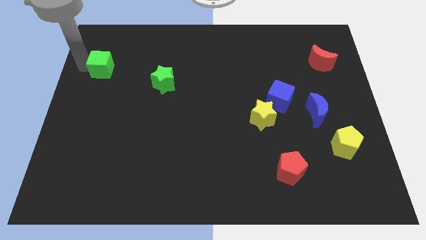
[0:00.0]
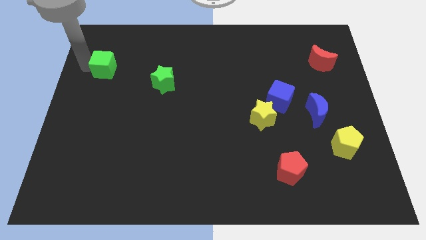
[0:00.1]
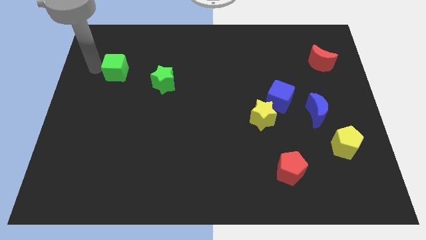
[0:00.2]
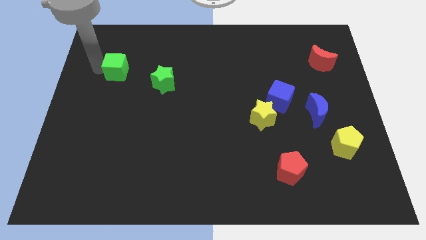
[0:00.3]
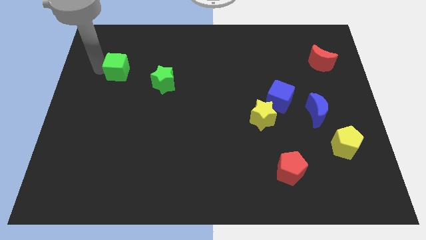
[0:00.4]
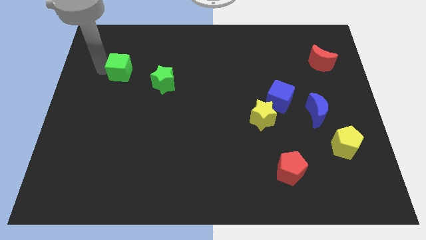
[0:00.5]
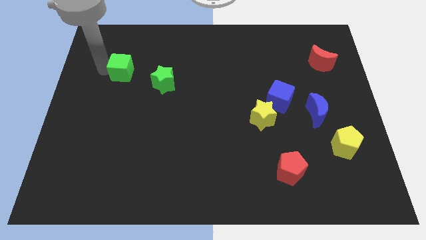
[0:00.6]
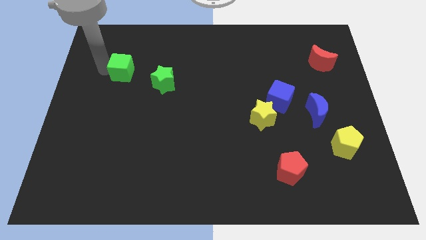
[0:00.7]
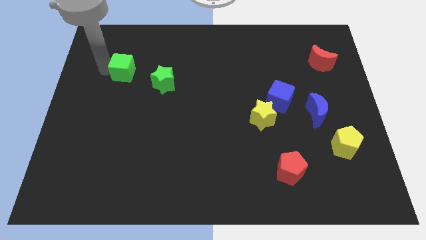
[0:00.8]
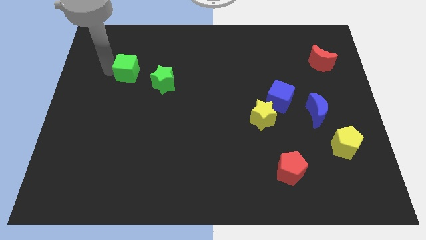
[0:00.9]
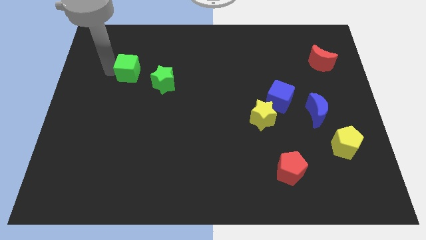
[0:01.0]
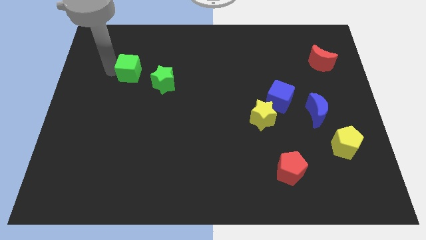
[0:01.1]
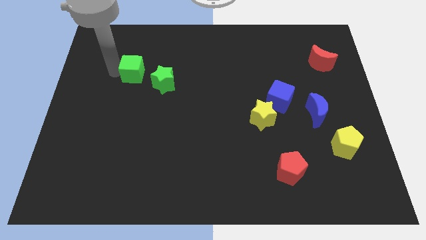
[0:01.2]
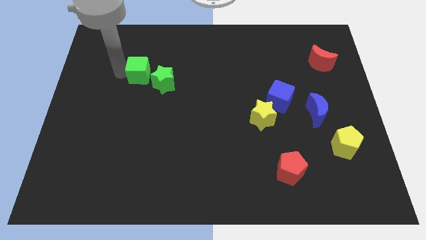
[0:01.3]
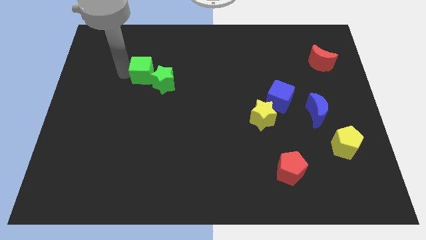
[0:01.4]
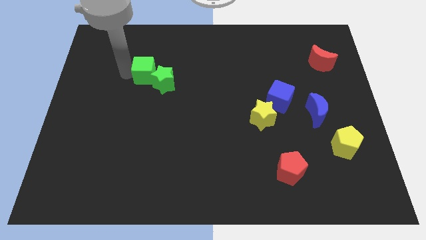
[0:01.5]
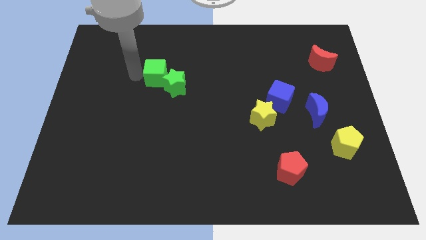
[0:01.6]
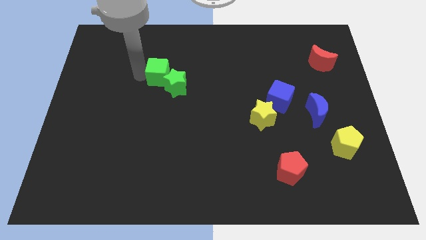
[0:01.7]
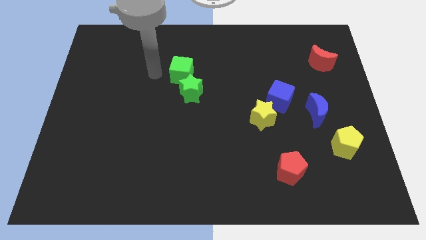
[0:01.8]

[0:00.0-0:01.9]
push green star with green cube

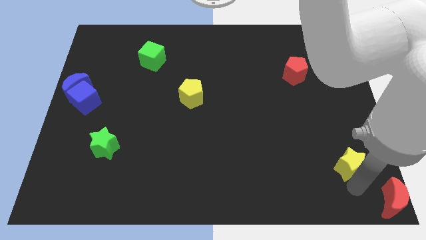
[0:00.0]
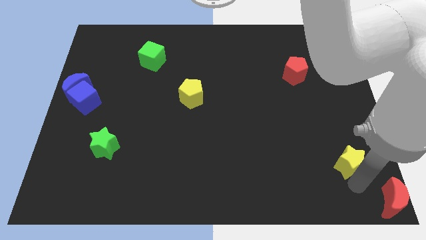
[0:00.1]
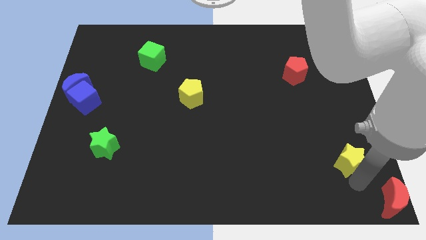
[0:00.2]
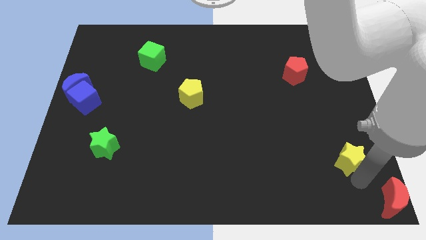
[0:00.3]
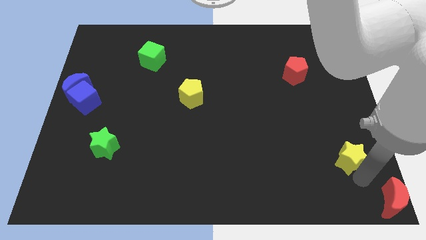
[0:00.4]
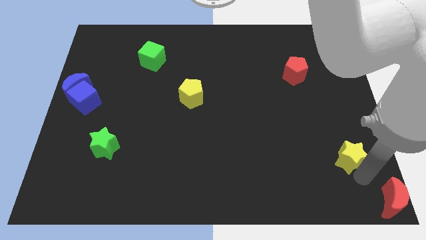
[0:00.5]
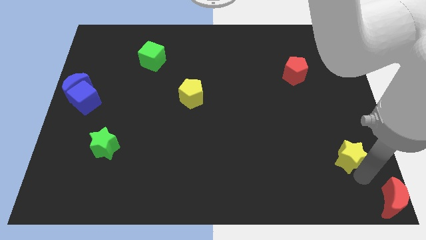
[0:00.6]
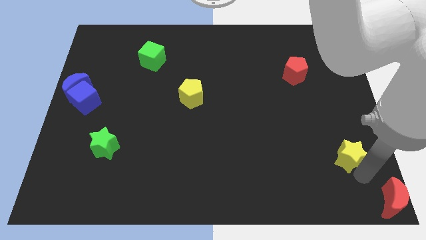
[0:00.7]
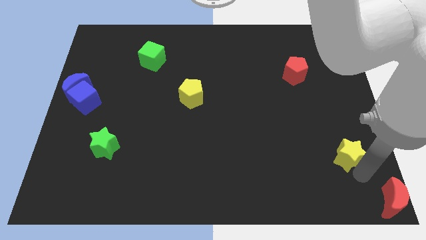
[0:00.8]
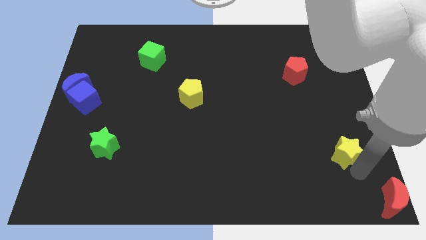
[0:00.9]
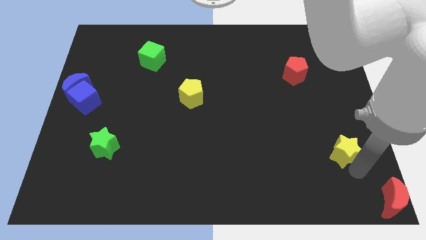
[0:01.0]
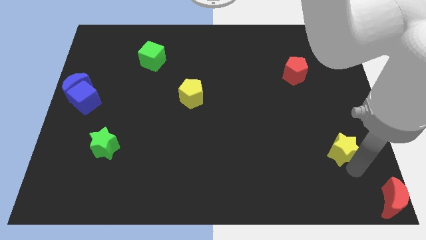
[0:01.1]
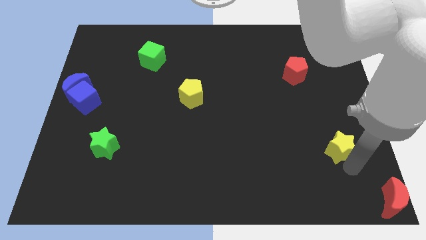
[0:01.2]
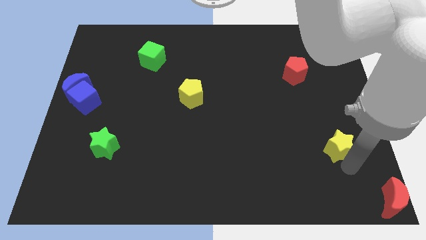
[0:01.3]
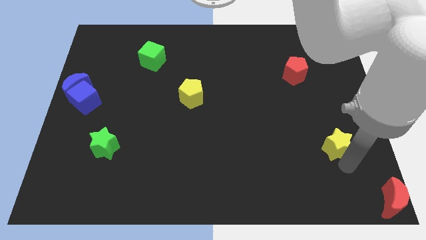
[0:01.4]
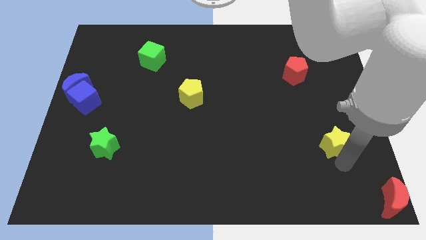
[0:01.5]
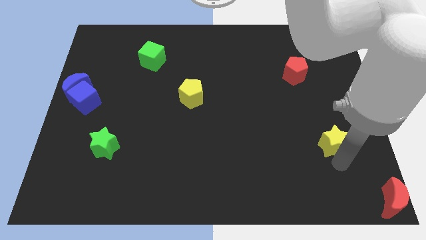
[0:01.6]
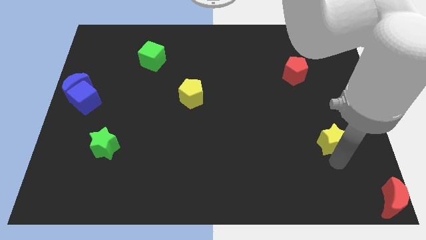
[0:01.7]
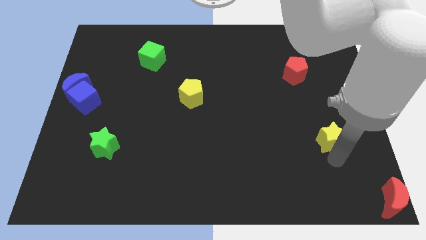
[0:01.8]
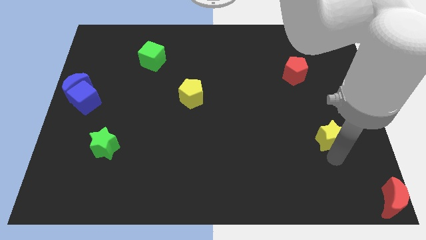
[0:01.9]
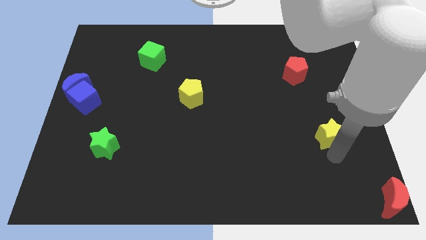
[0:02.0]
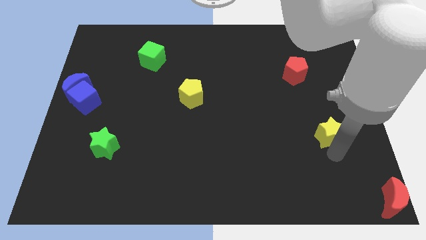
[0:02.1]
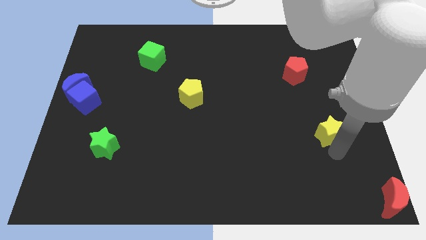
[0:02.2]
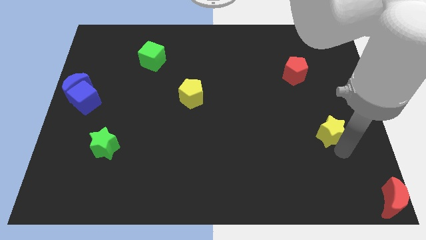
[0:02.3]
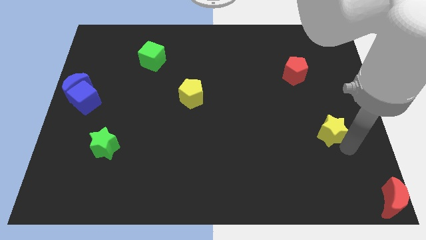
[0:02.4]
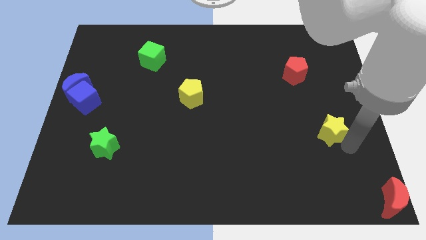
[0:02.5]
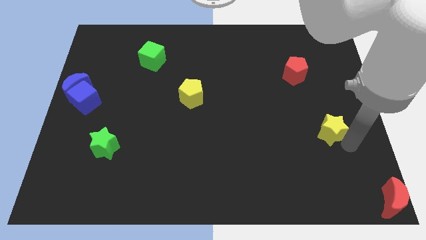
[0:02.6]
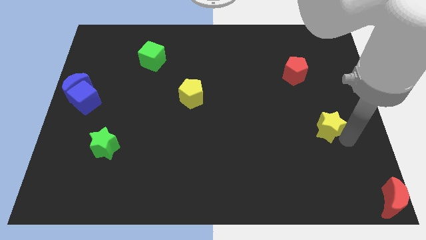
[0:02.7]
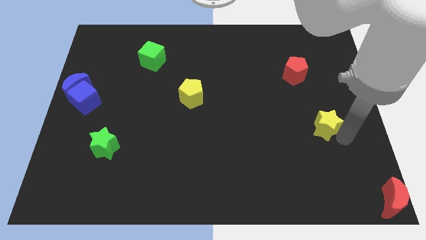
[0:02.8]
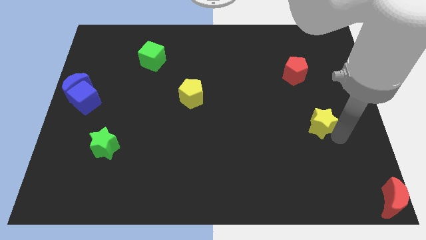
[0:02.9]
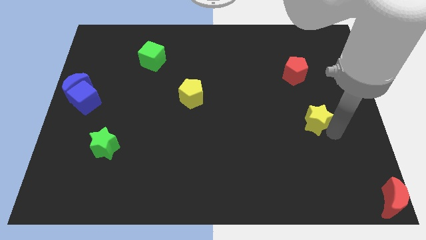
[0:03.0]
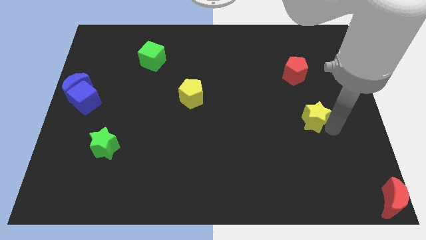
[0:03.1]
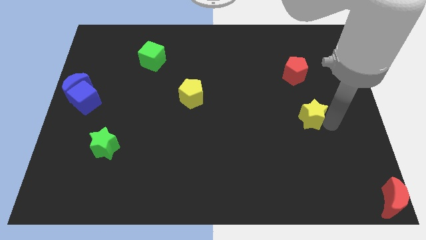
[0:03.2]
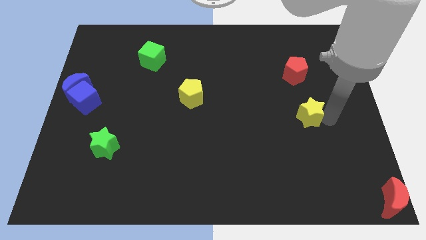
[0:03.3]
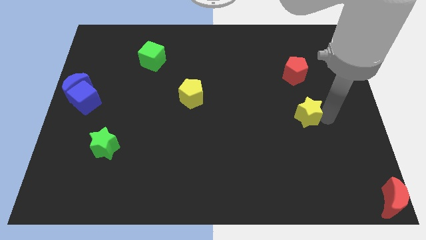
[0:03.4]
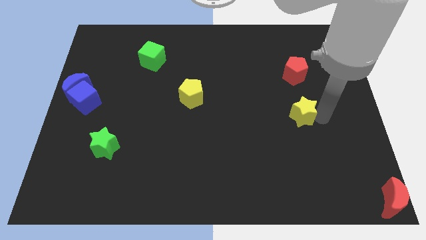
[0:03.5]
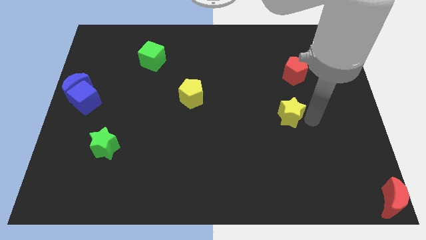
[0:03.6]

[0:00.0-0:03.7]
place the yellow star vertically below the red pentagon

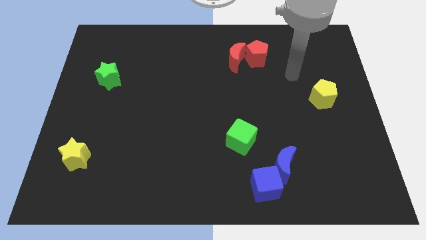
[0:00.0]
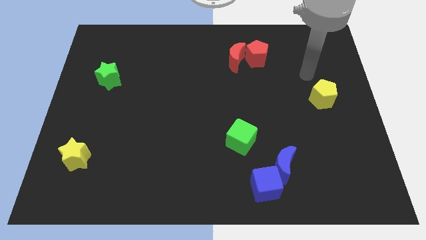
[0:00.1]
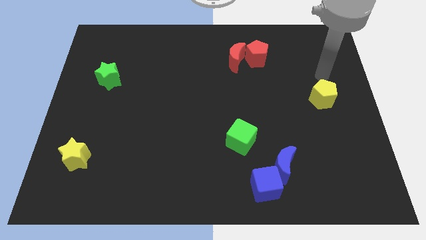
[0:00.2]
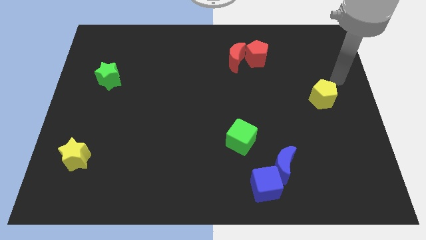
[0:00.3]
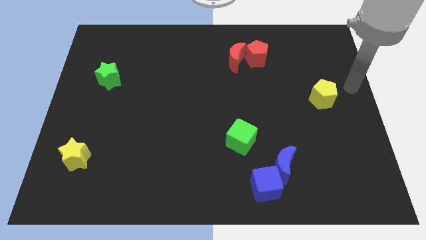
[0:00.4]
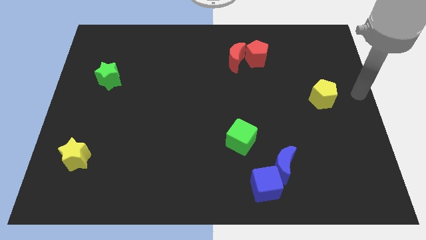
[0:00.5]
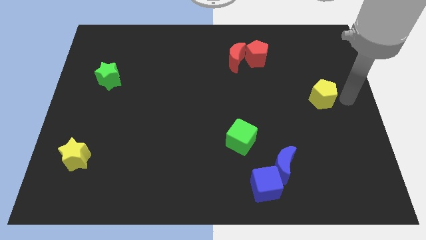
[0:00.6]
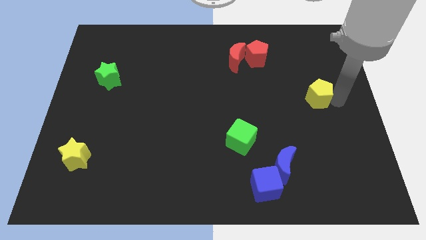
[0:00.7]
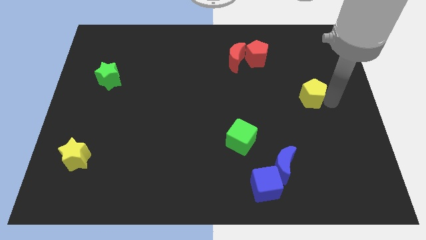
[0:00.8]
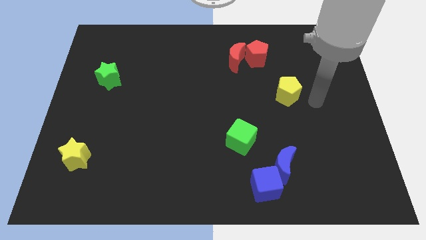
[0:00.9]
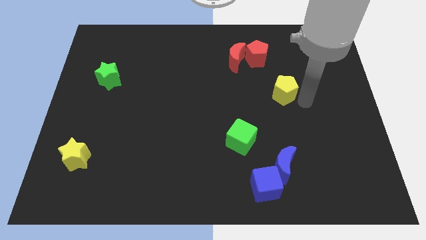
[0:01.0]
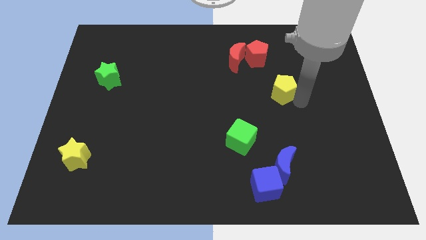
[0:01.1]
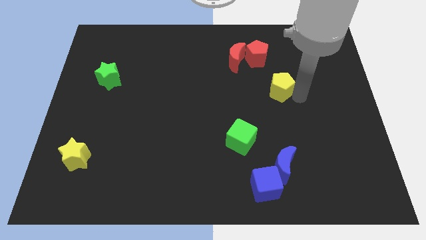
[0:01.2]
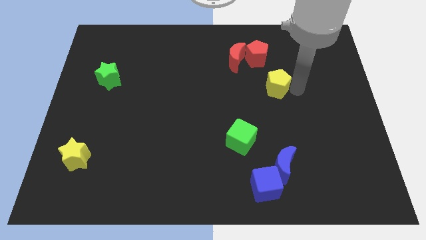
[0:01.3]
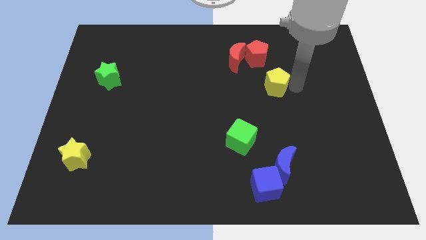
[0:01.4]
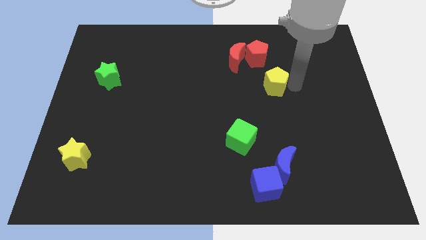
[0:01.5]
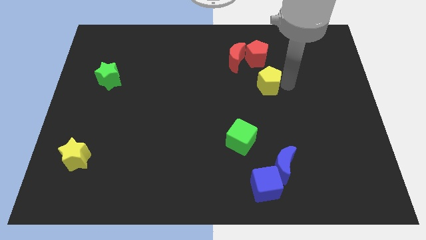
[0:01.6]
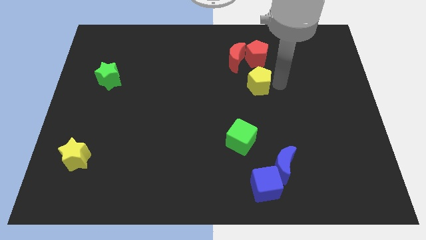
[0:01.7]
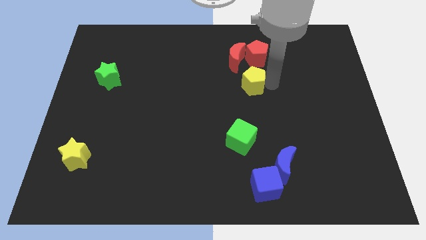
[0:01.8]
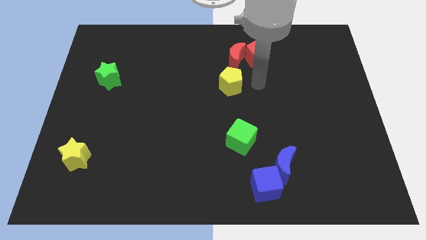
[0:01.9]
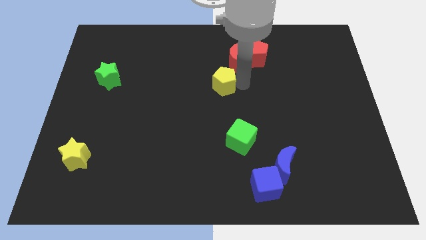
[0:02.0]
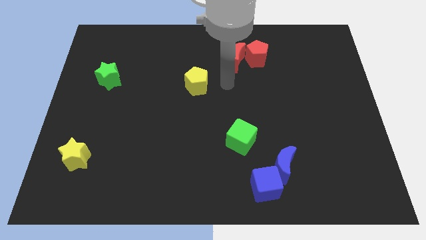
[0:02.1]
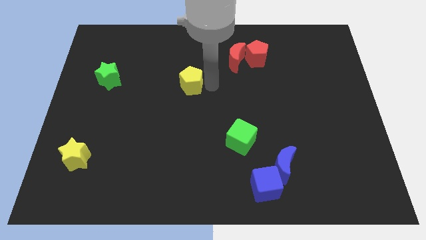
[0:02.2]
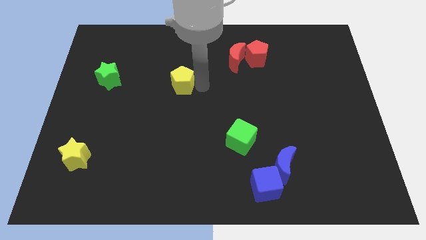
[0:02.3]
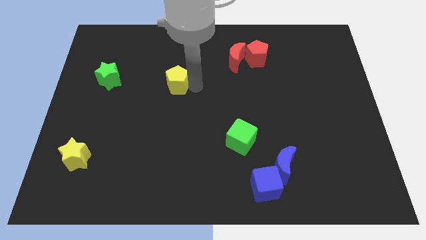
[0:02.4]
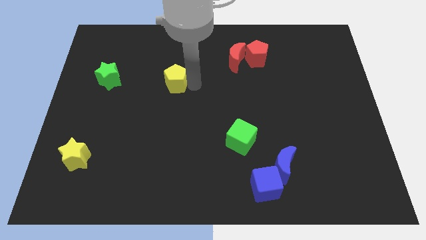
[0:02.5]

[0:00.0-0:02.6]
move yellow pentagon towards green star

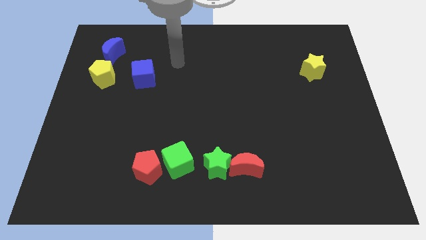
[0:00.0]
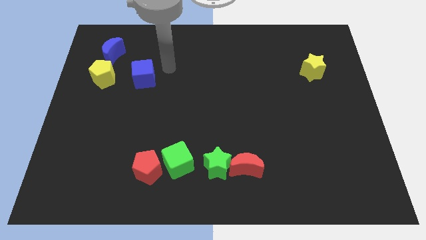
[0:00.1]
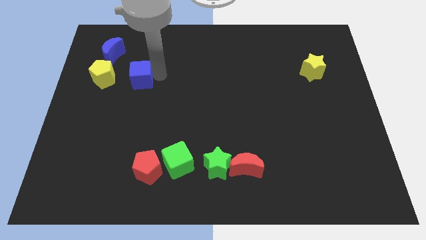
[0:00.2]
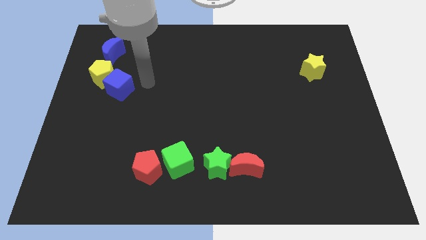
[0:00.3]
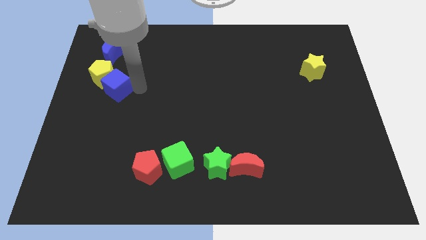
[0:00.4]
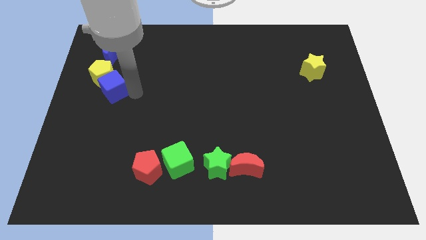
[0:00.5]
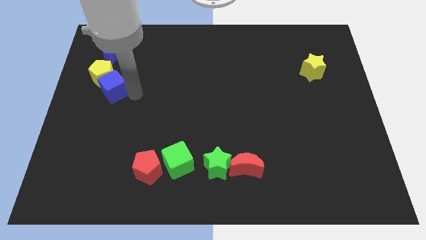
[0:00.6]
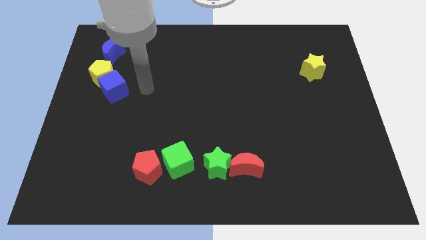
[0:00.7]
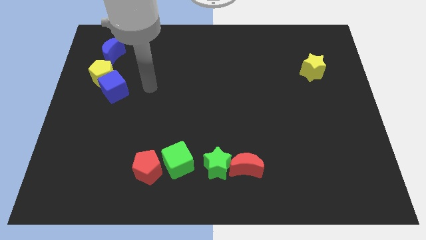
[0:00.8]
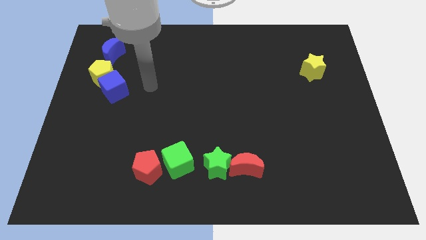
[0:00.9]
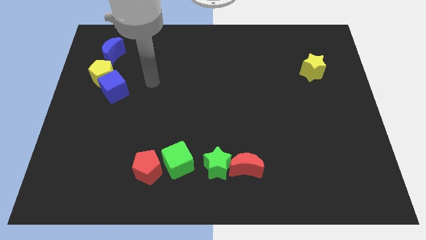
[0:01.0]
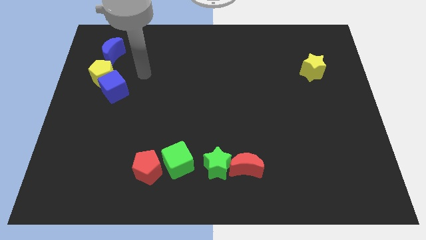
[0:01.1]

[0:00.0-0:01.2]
move the blue cube bottom right to the yellow pentagon
